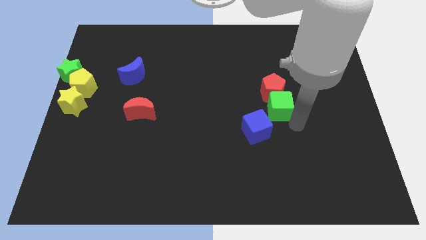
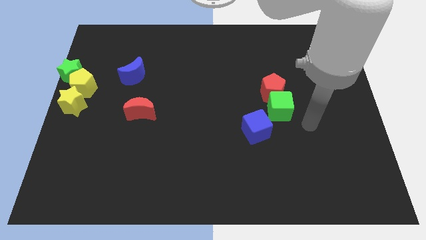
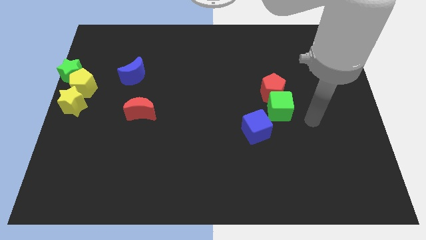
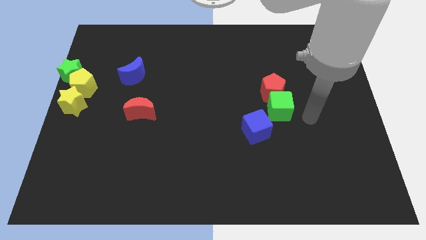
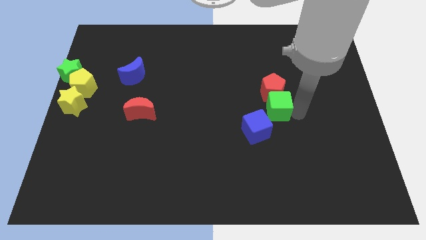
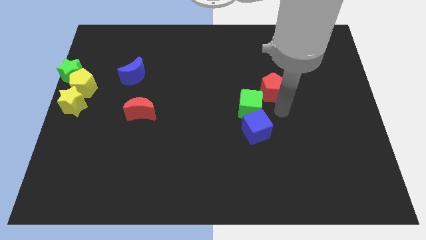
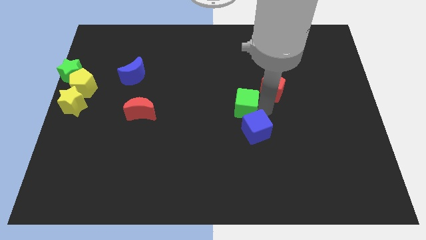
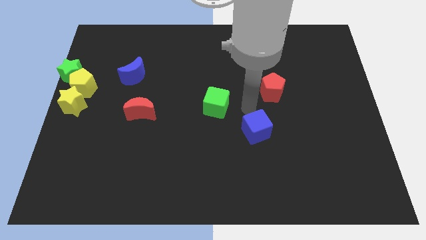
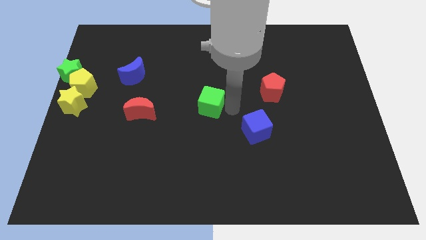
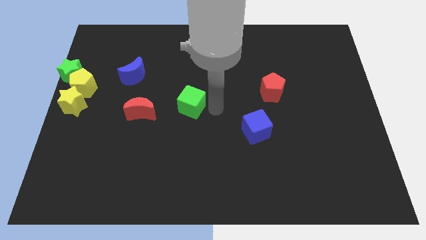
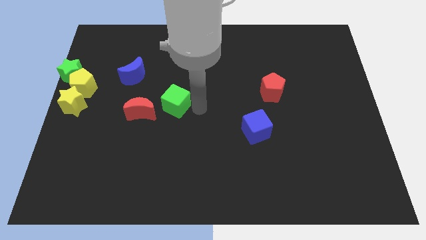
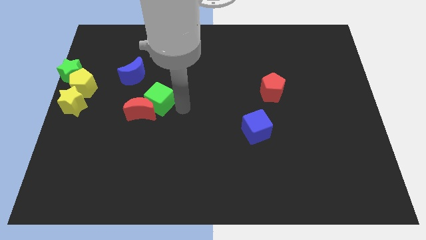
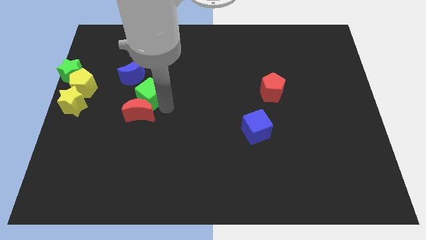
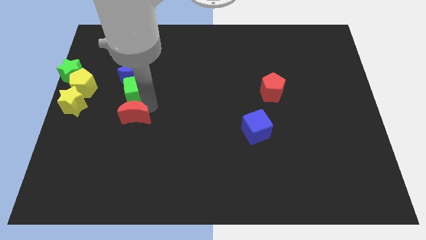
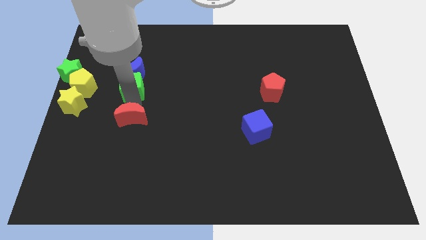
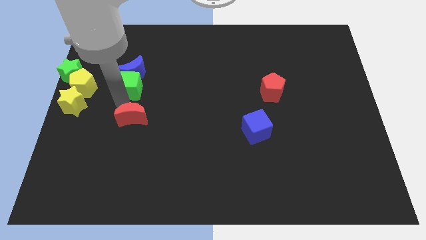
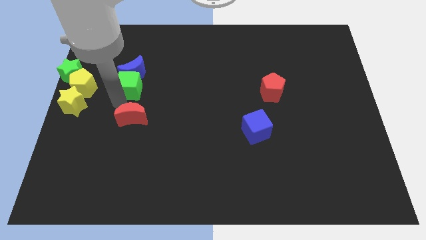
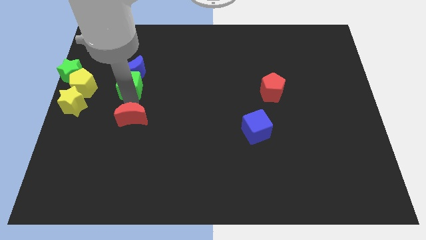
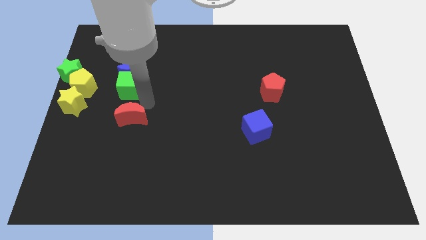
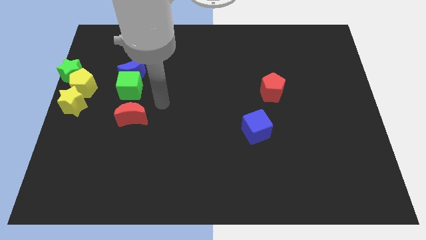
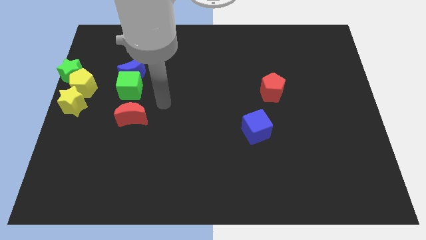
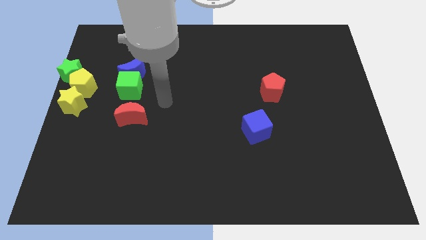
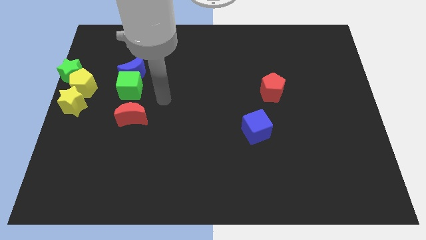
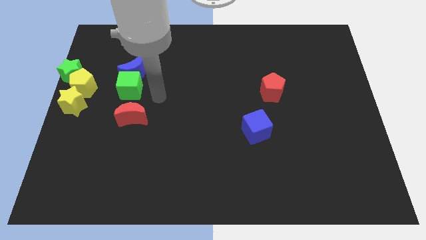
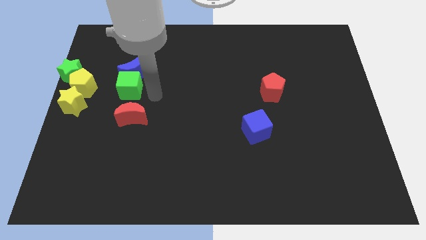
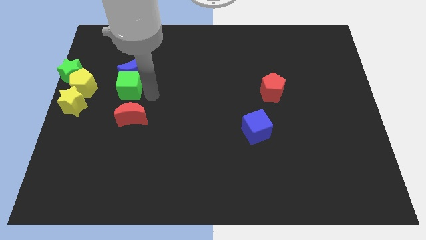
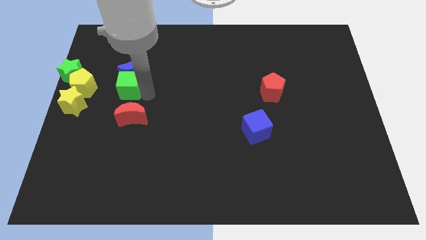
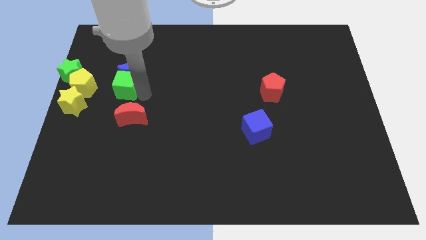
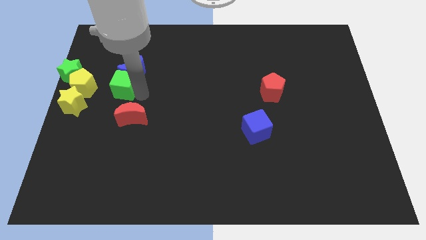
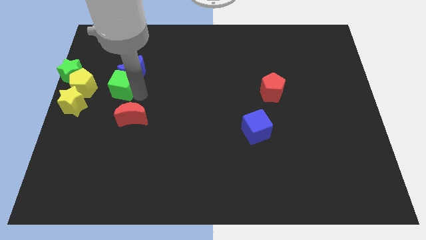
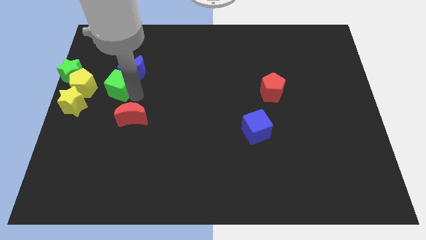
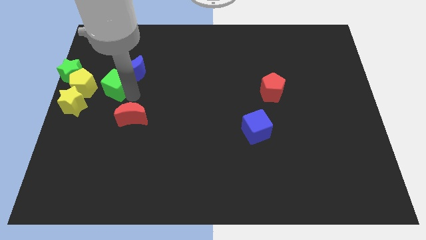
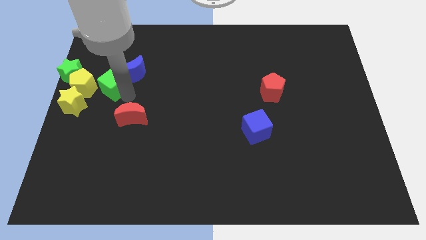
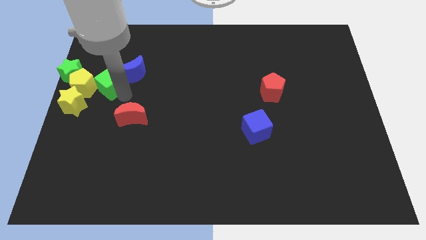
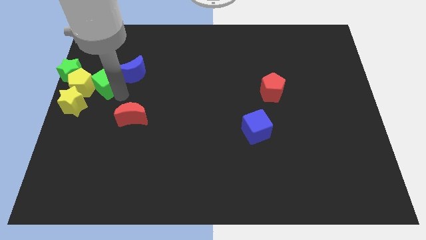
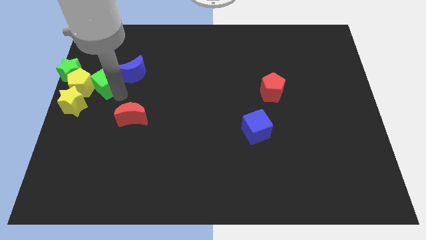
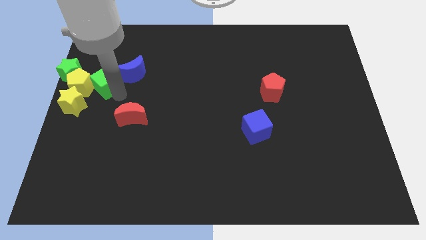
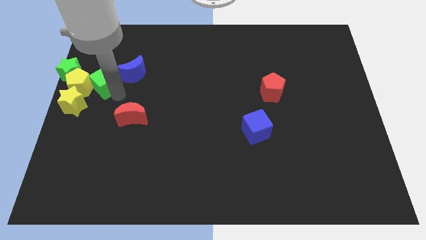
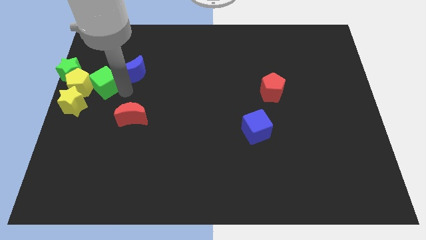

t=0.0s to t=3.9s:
move green cube right beside the yellow pentagon

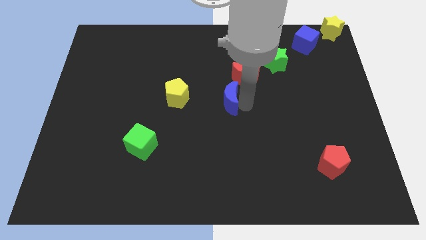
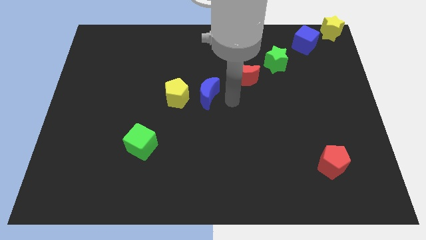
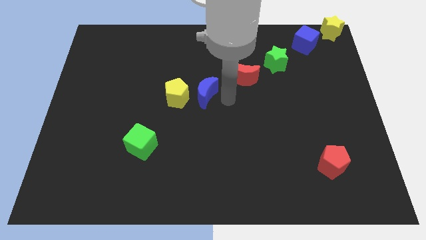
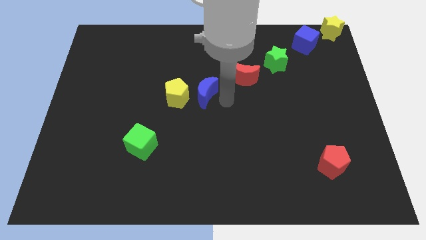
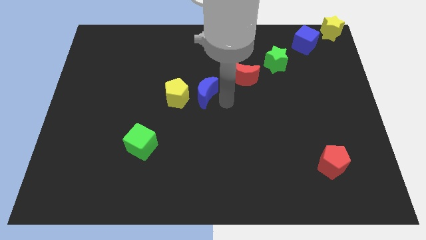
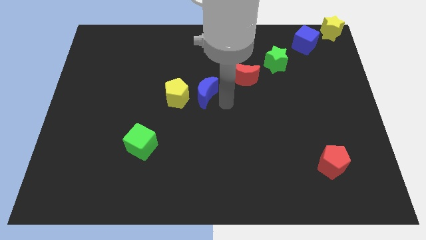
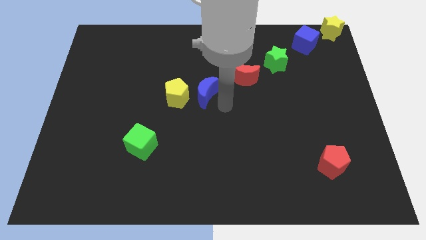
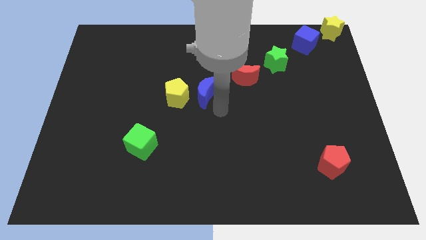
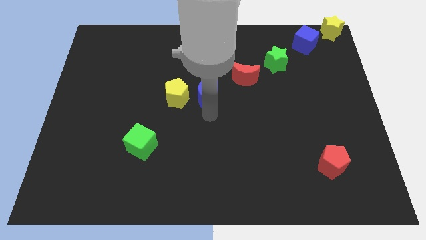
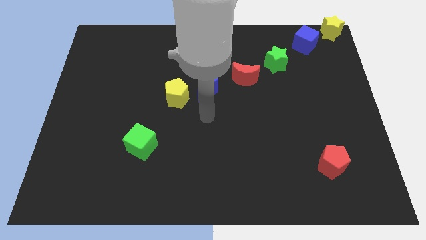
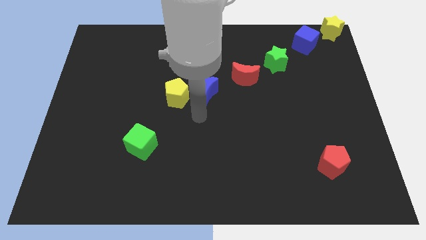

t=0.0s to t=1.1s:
place the blue moon to the right of the yellow pentagon

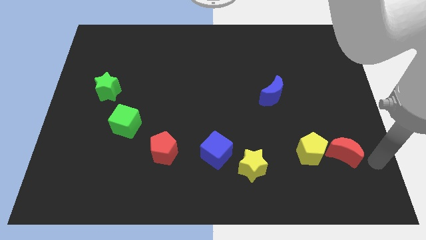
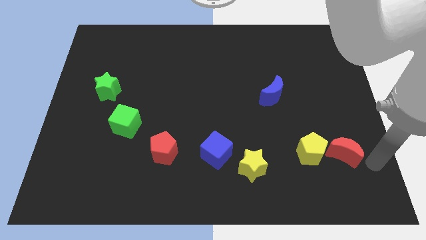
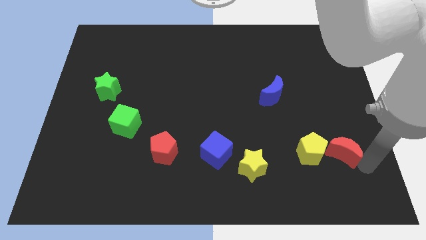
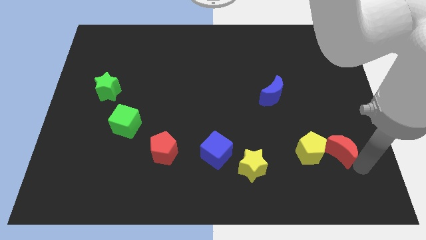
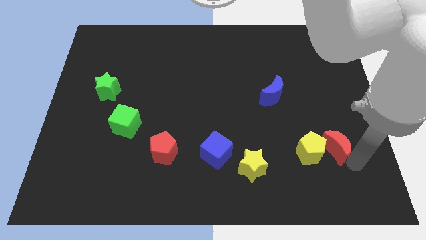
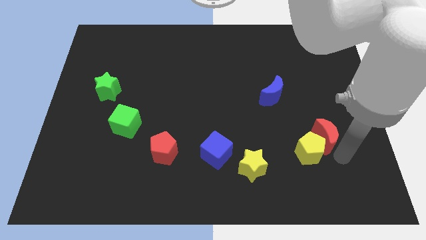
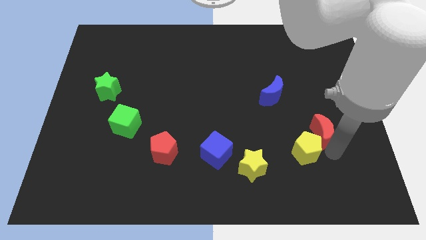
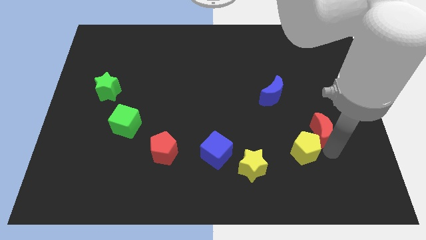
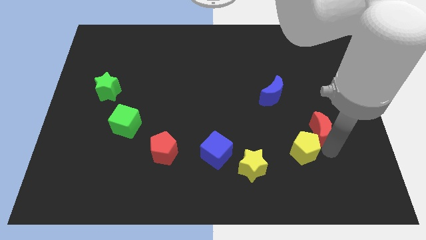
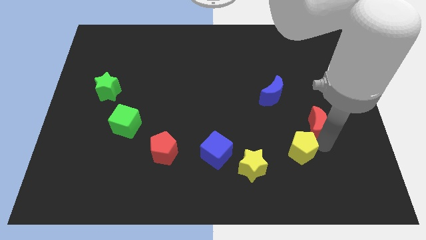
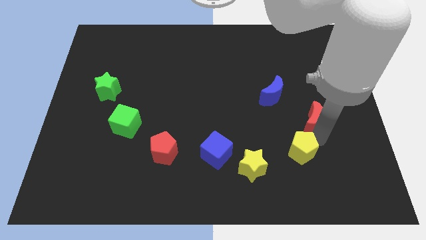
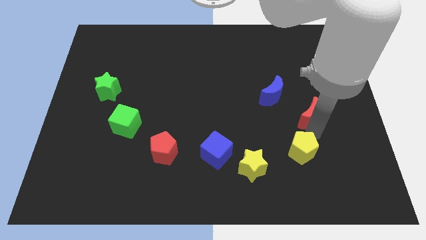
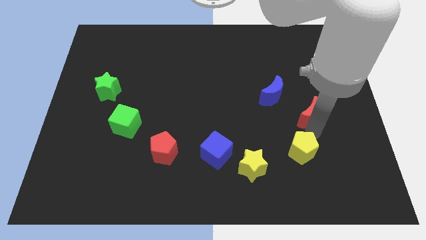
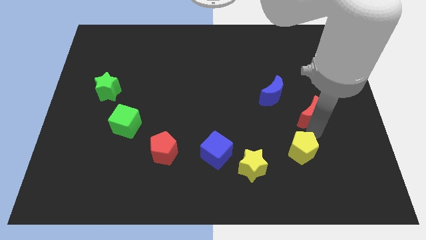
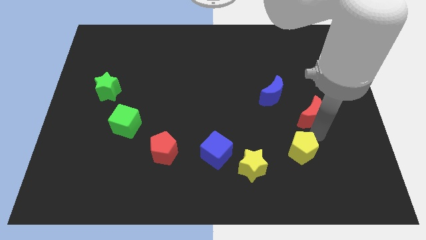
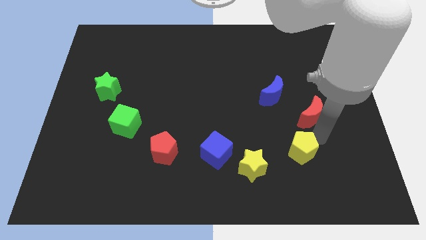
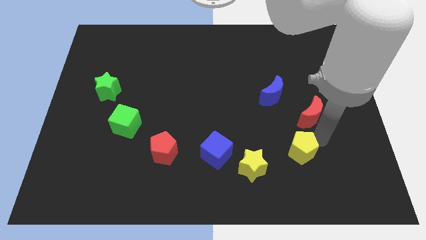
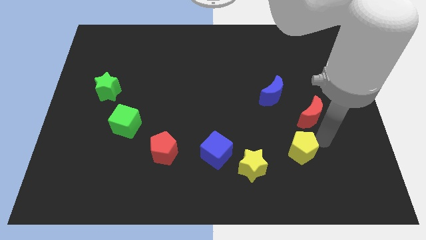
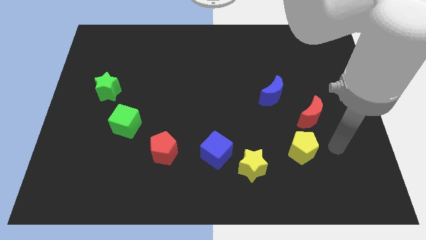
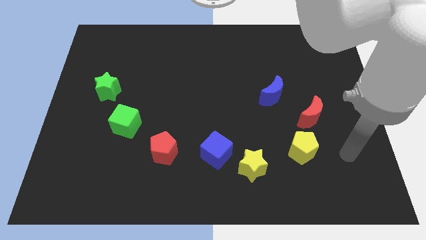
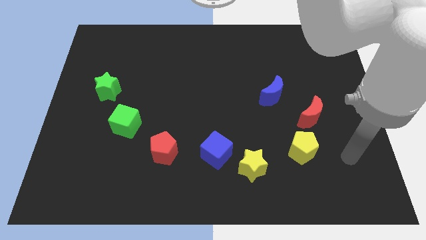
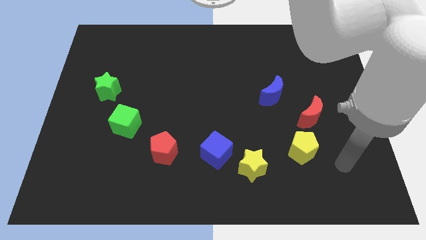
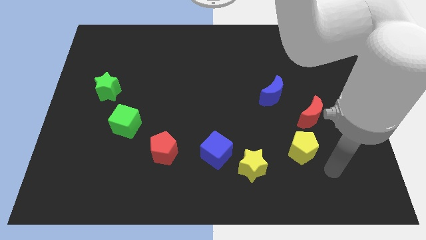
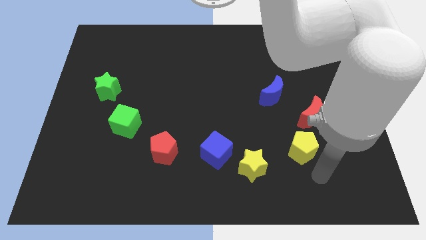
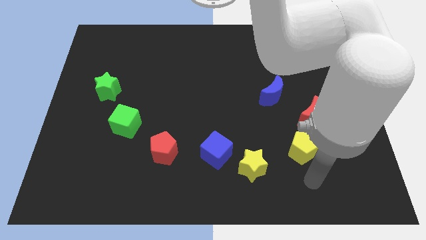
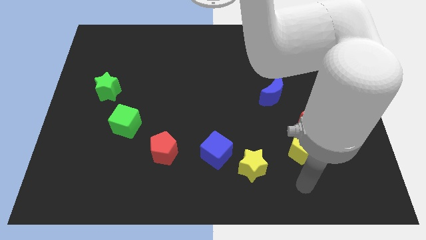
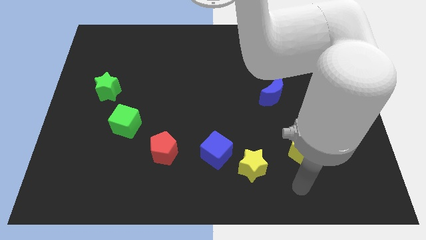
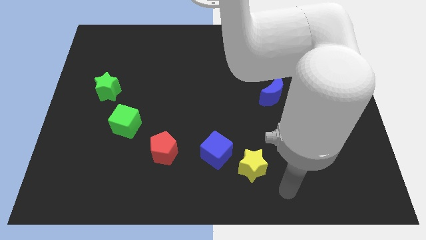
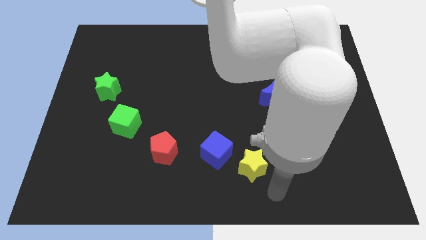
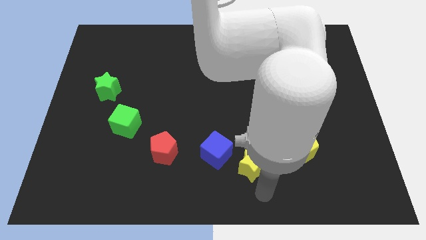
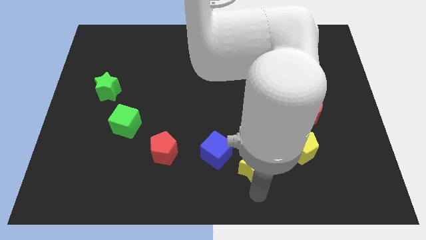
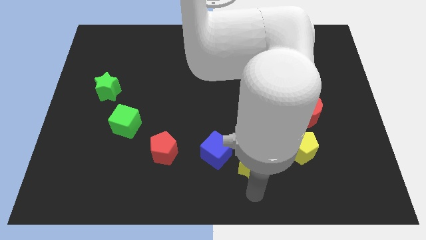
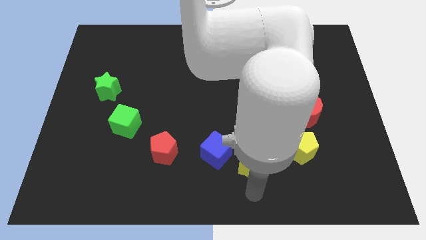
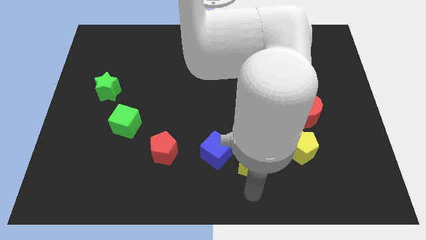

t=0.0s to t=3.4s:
push the red crescent to the top of the yellow pentagon

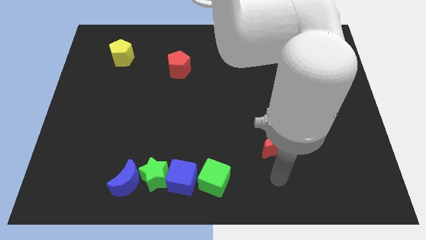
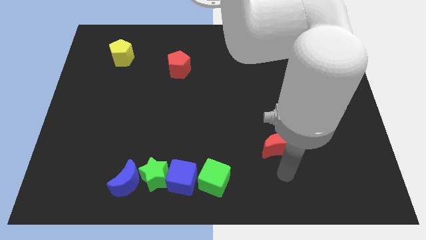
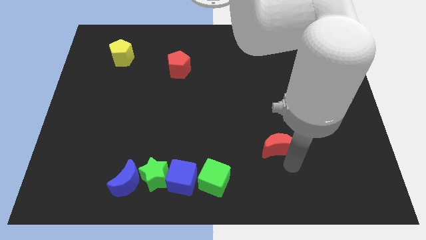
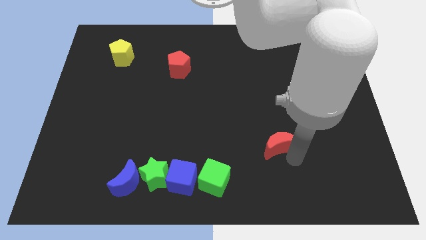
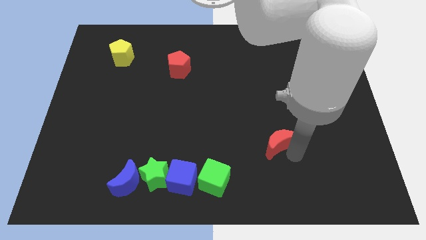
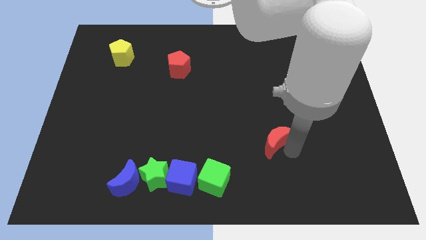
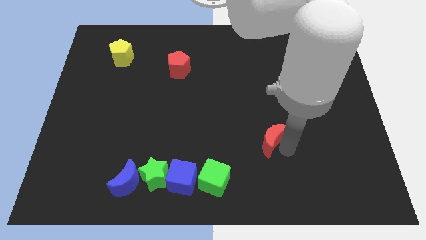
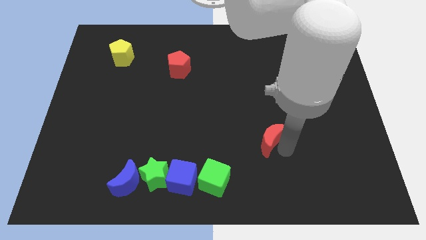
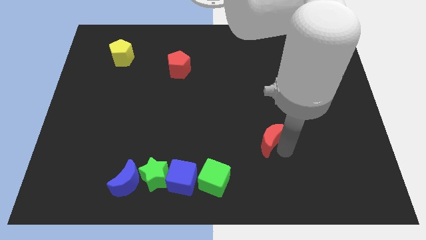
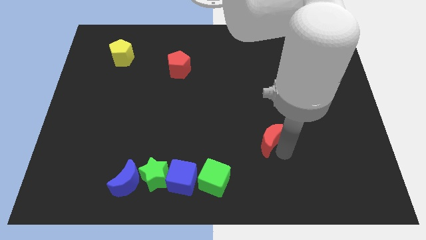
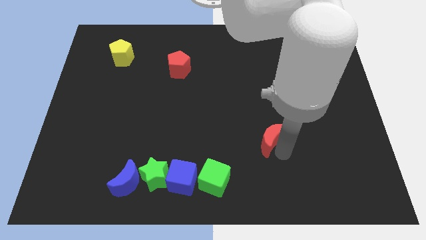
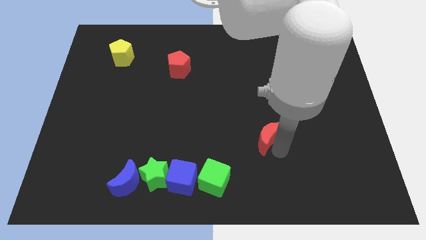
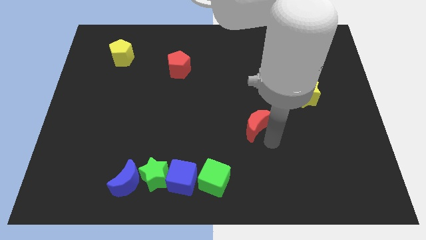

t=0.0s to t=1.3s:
put the red moon in between the yellow star and green cube
